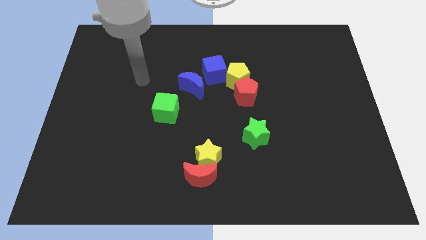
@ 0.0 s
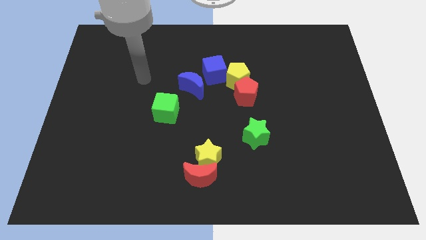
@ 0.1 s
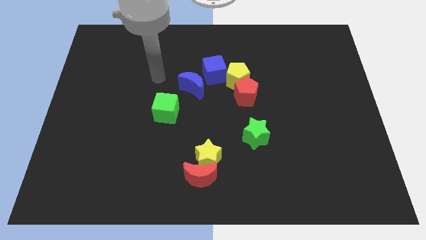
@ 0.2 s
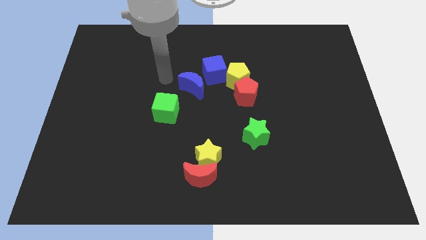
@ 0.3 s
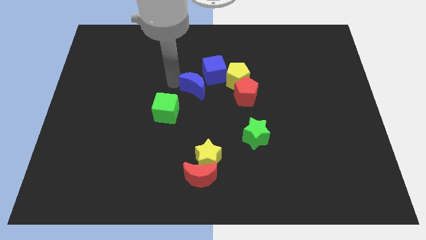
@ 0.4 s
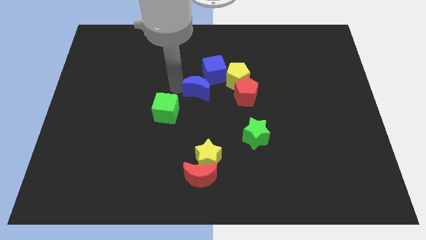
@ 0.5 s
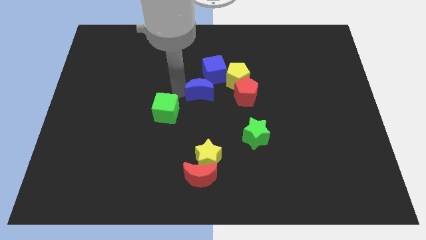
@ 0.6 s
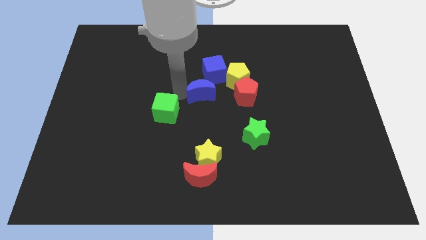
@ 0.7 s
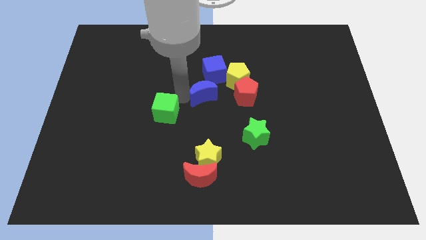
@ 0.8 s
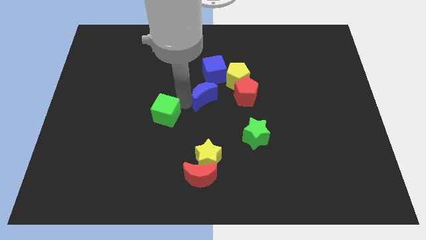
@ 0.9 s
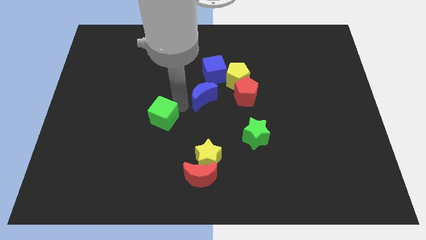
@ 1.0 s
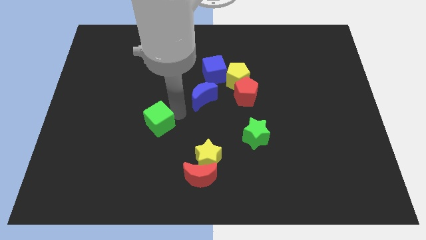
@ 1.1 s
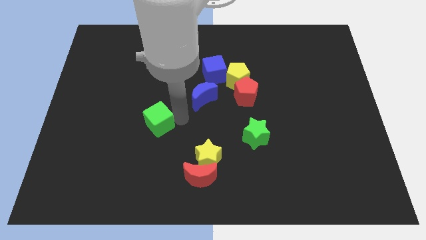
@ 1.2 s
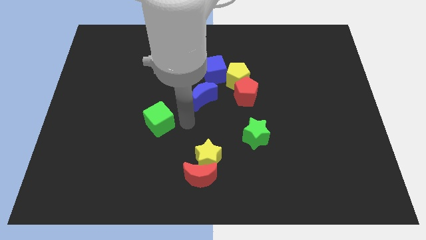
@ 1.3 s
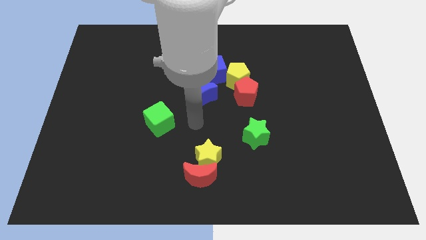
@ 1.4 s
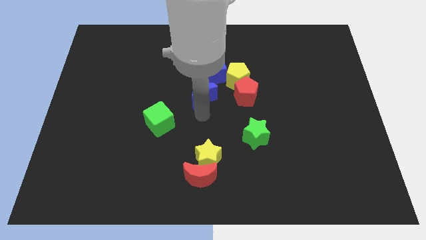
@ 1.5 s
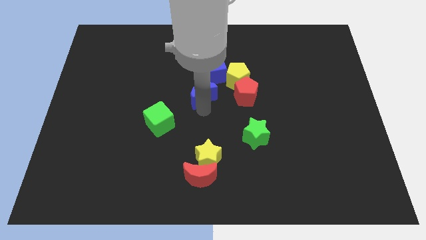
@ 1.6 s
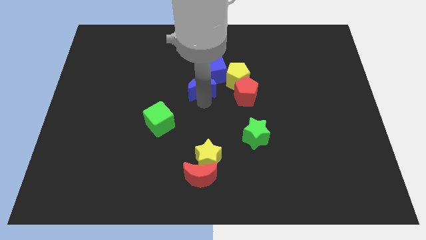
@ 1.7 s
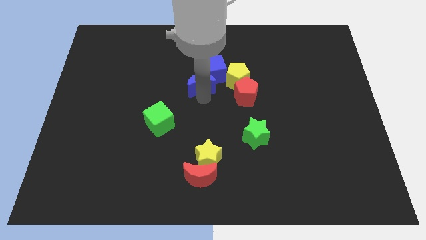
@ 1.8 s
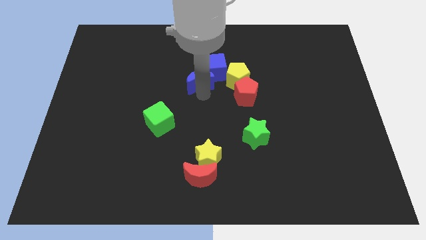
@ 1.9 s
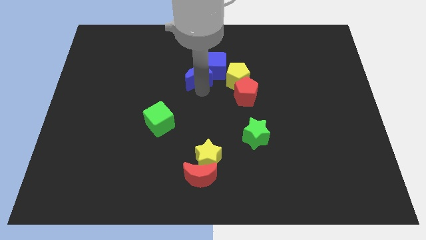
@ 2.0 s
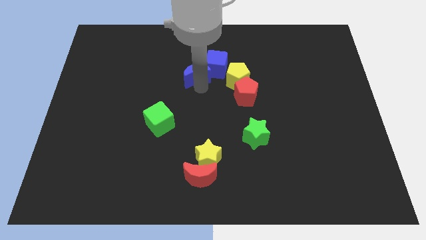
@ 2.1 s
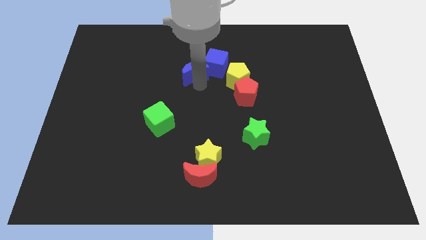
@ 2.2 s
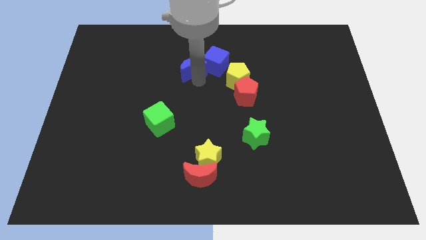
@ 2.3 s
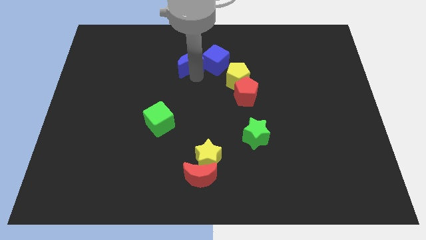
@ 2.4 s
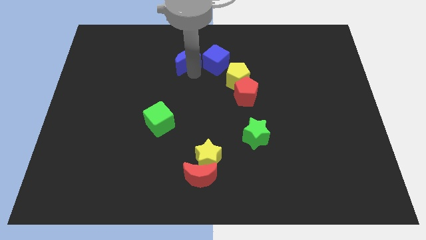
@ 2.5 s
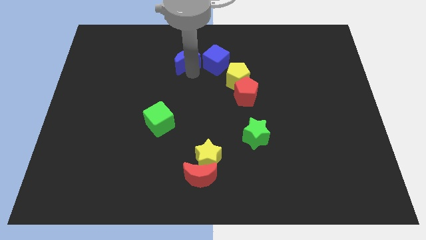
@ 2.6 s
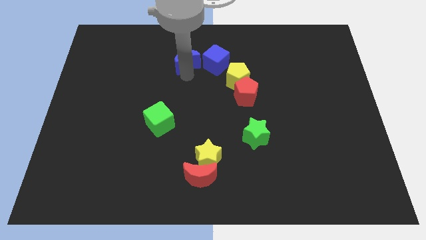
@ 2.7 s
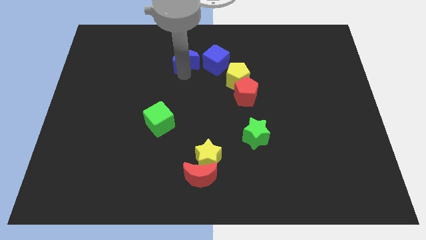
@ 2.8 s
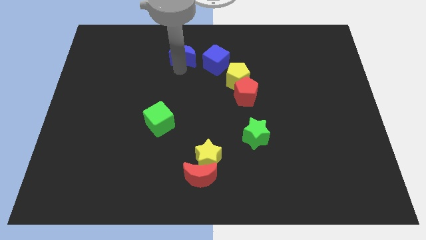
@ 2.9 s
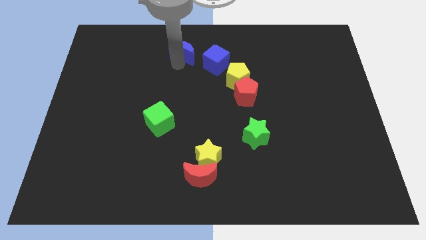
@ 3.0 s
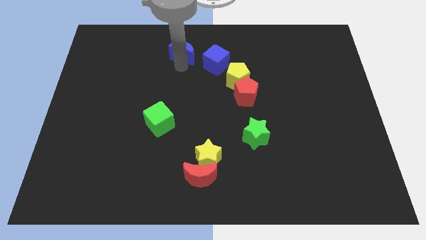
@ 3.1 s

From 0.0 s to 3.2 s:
place the blue crescent to the left of the blue cube

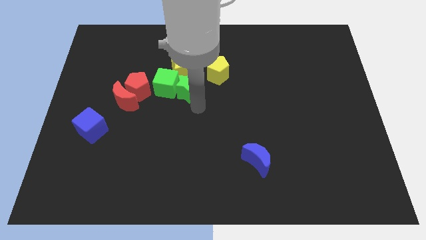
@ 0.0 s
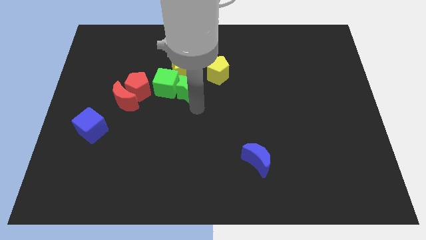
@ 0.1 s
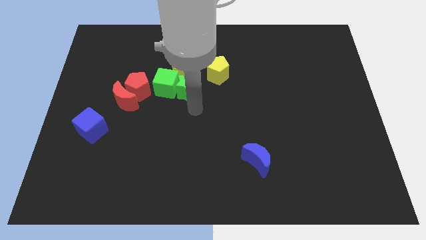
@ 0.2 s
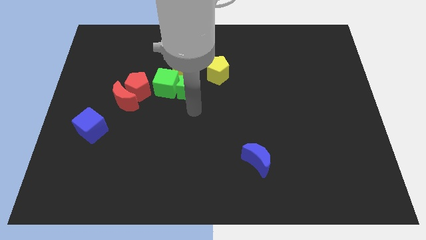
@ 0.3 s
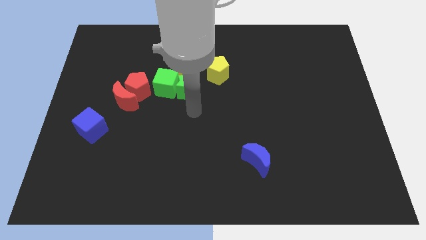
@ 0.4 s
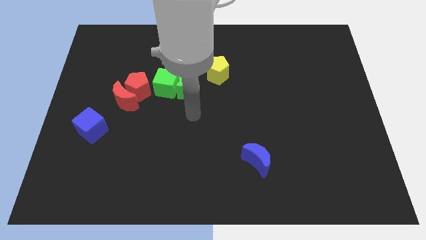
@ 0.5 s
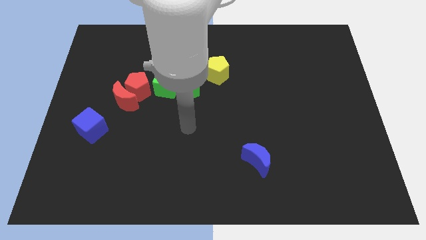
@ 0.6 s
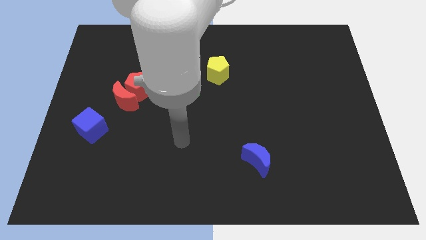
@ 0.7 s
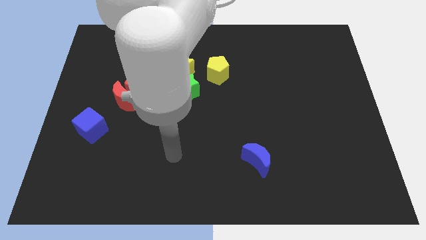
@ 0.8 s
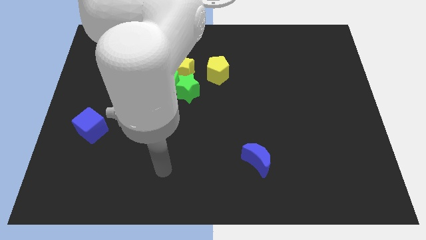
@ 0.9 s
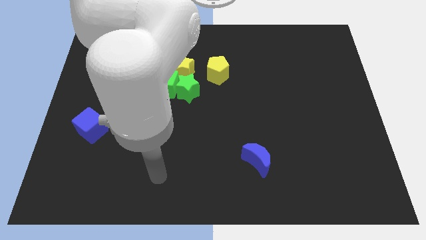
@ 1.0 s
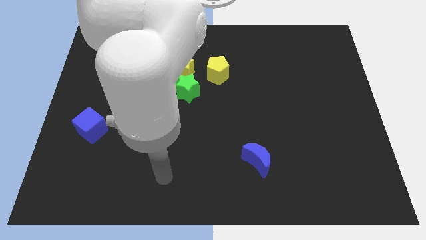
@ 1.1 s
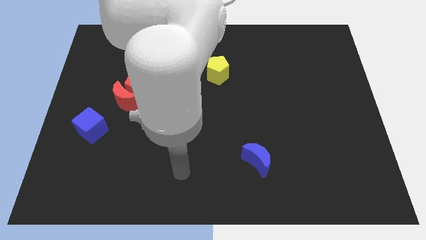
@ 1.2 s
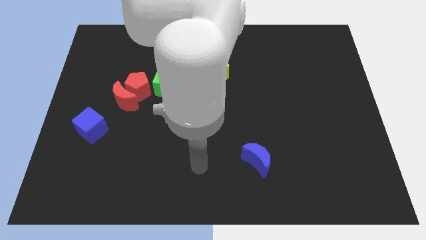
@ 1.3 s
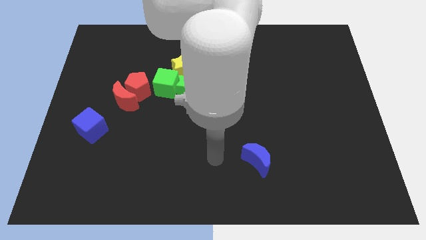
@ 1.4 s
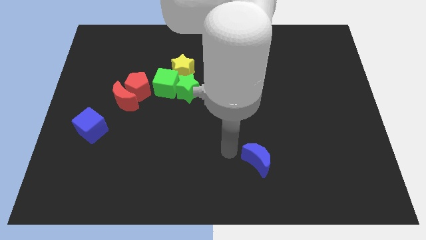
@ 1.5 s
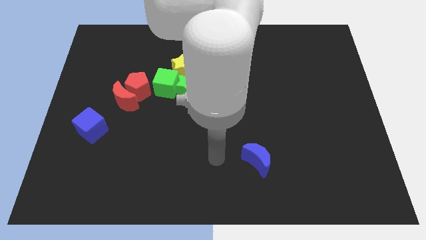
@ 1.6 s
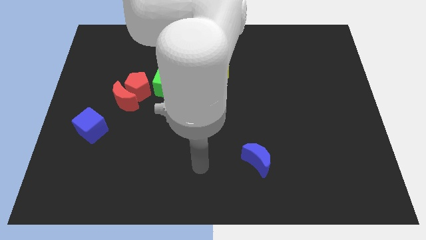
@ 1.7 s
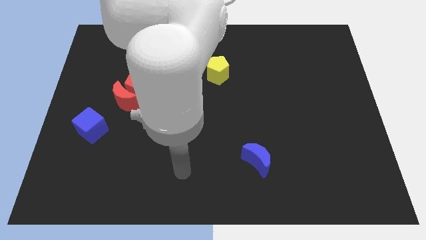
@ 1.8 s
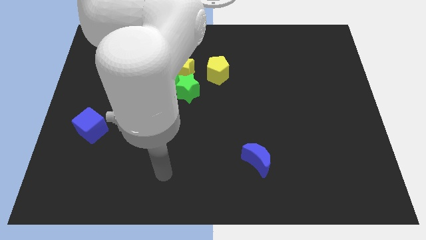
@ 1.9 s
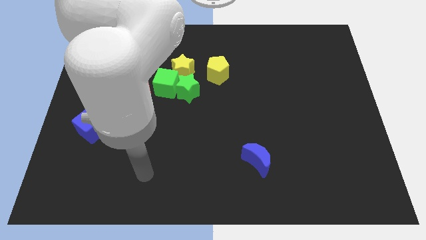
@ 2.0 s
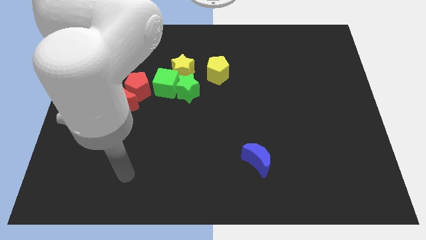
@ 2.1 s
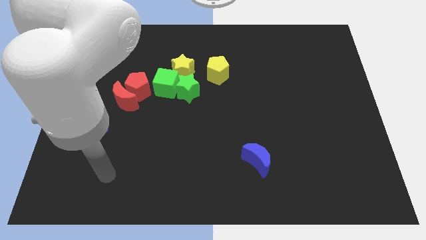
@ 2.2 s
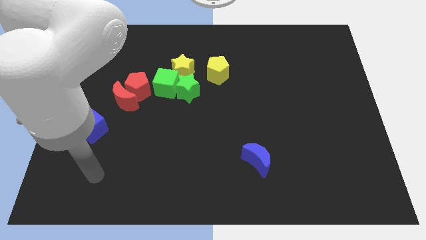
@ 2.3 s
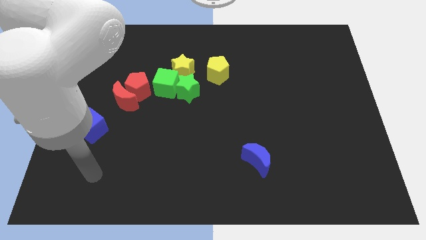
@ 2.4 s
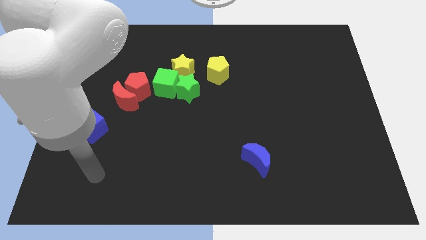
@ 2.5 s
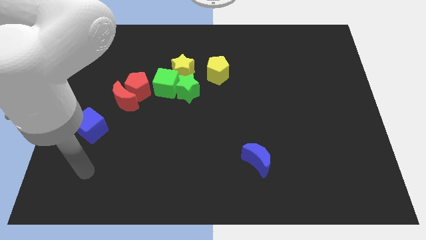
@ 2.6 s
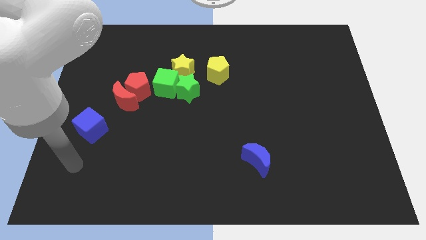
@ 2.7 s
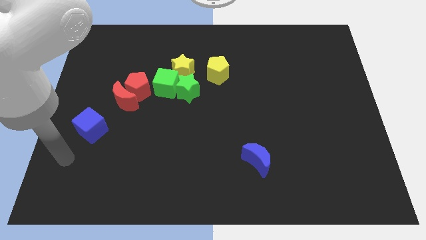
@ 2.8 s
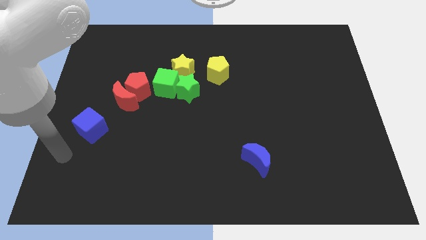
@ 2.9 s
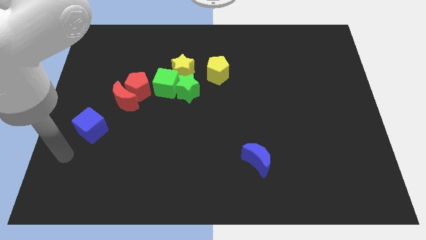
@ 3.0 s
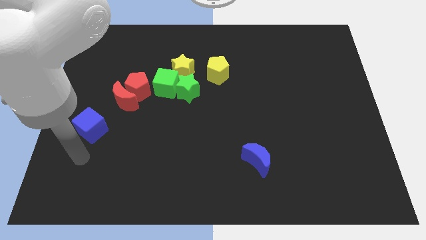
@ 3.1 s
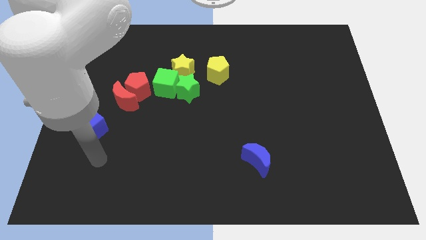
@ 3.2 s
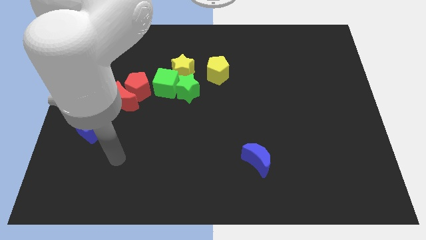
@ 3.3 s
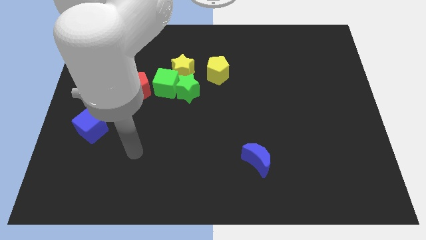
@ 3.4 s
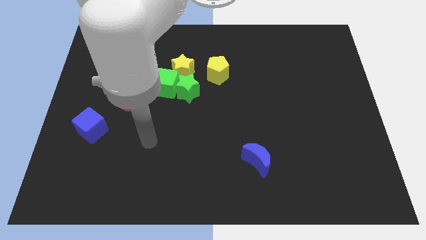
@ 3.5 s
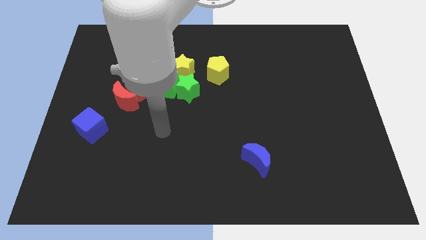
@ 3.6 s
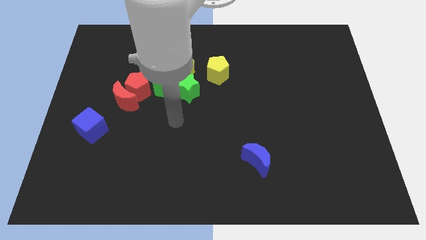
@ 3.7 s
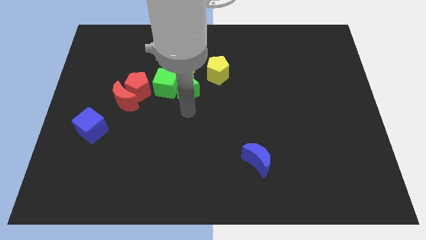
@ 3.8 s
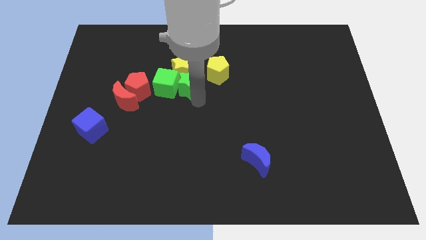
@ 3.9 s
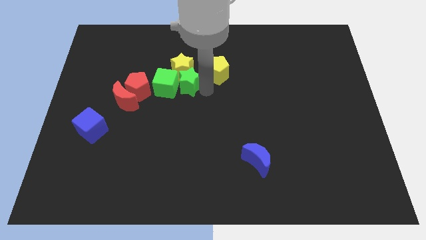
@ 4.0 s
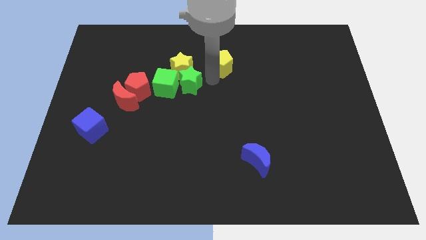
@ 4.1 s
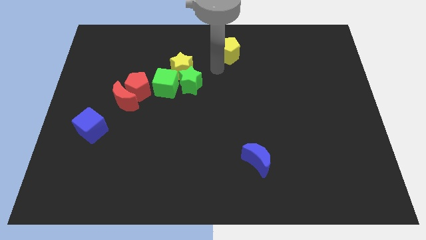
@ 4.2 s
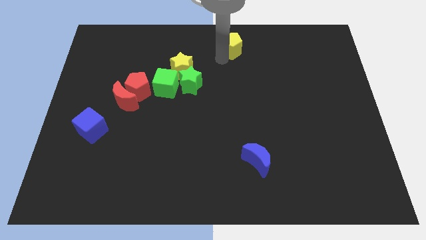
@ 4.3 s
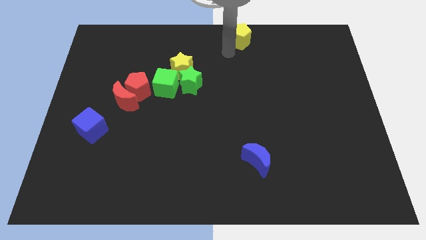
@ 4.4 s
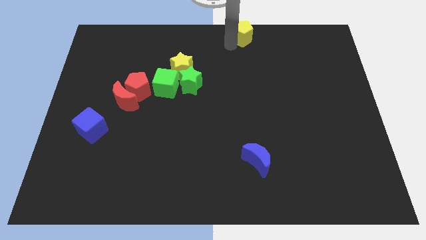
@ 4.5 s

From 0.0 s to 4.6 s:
slide the yellow pentagon to the top side of the table

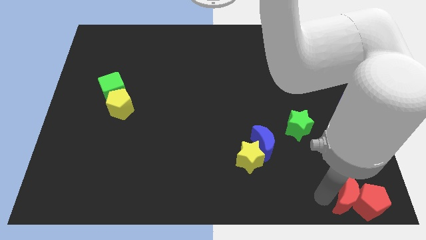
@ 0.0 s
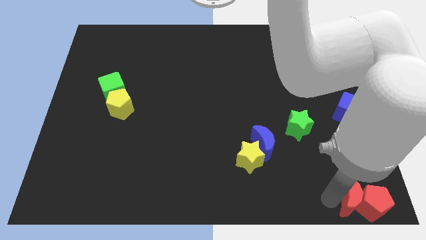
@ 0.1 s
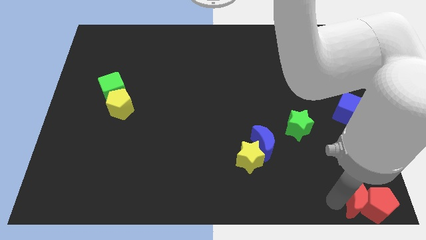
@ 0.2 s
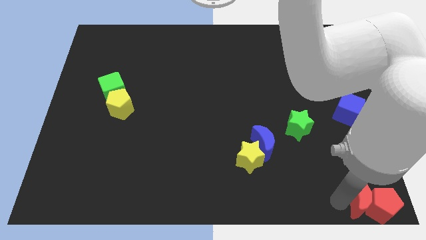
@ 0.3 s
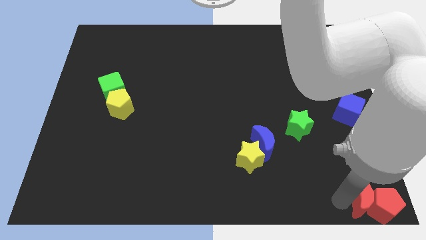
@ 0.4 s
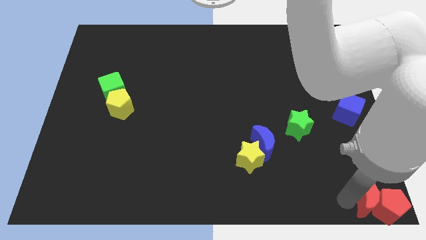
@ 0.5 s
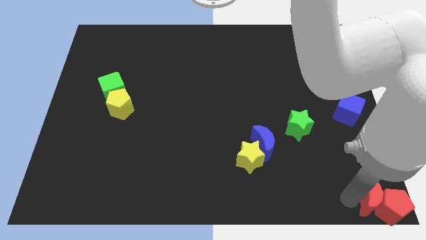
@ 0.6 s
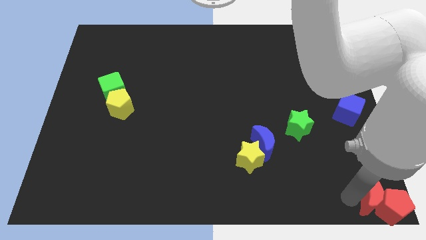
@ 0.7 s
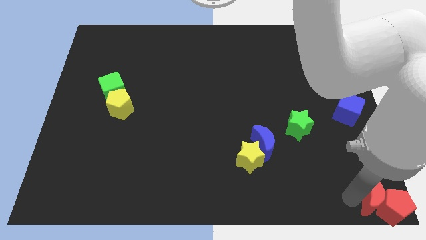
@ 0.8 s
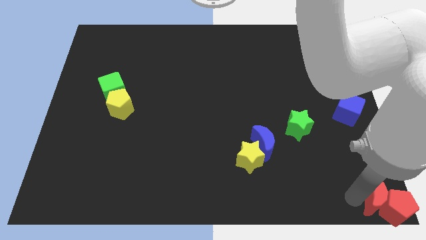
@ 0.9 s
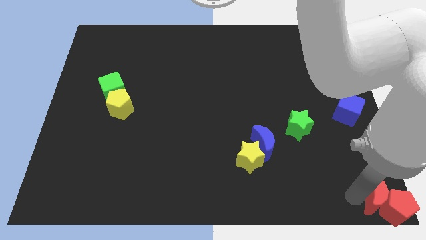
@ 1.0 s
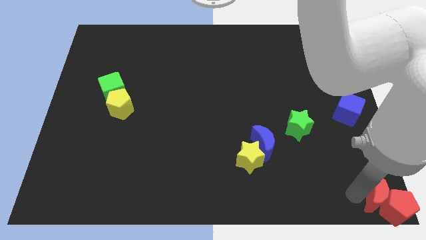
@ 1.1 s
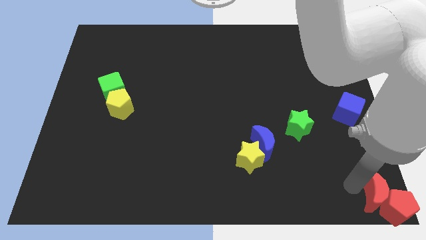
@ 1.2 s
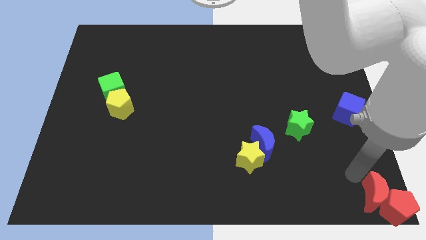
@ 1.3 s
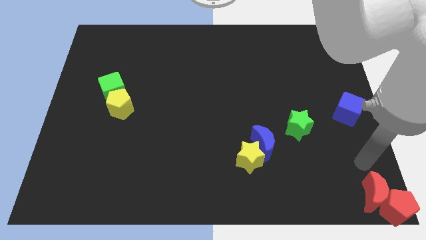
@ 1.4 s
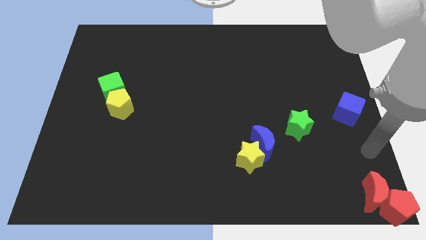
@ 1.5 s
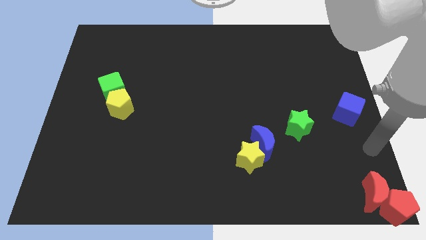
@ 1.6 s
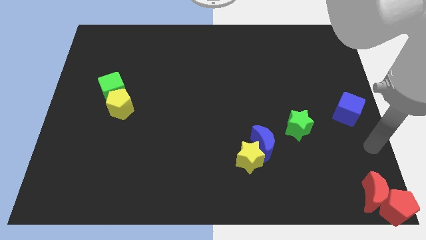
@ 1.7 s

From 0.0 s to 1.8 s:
move red moon and red pentagon to the bottom right corner of the board
